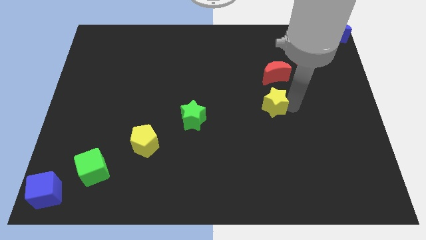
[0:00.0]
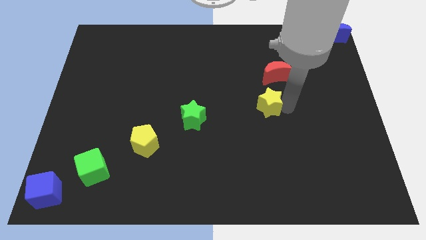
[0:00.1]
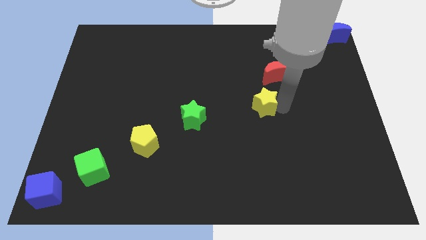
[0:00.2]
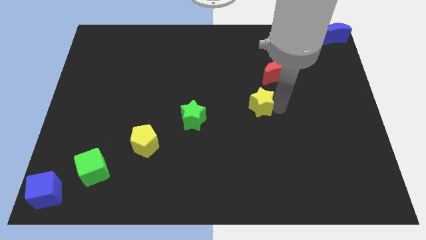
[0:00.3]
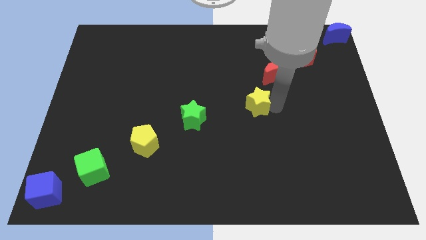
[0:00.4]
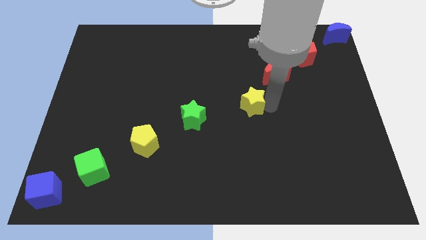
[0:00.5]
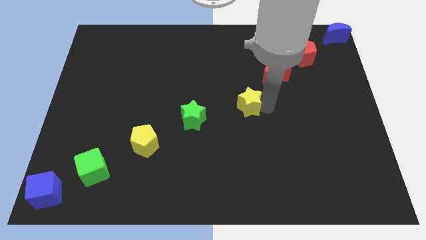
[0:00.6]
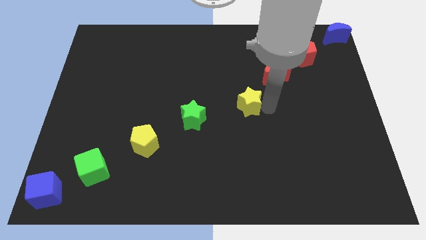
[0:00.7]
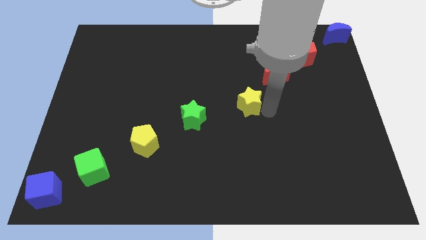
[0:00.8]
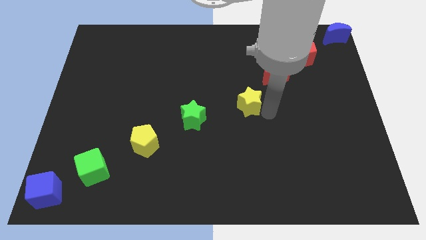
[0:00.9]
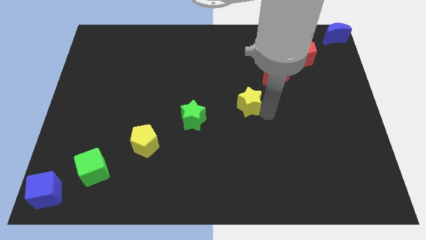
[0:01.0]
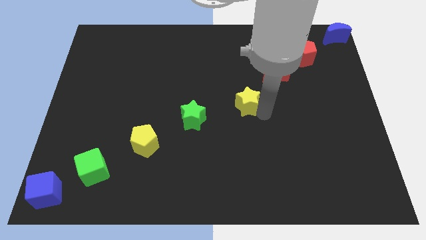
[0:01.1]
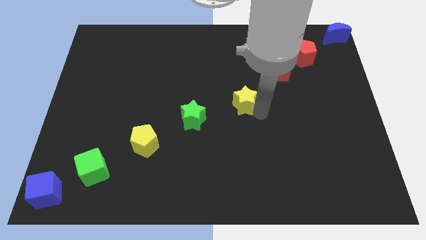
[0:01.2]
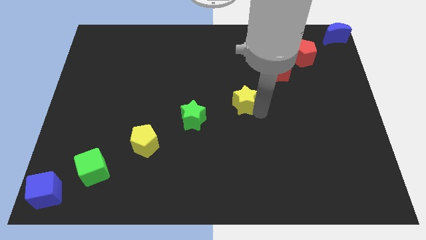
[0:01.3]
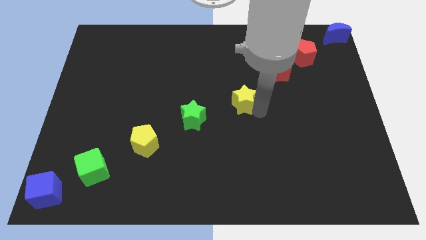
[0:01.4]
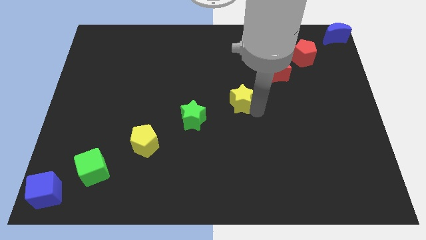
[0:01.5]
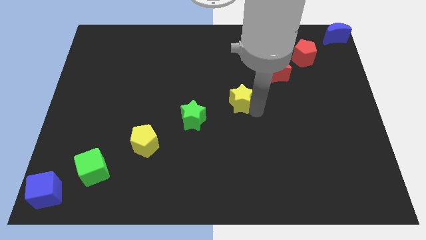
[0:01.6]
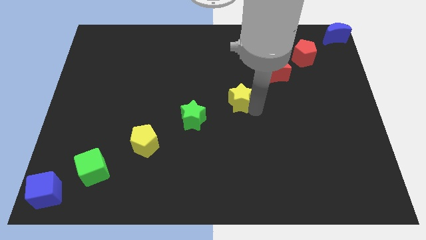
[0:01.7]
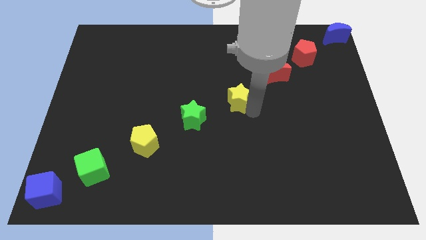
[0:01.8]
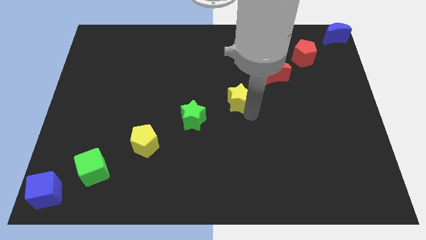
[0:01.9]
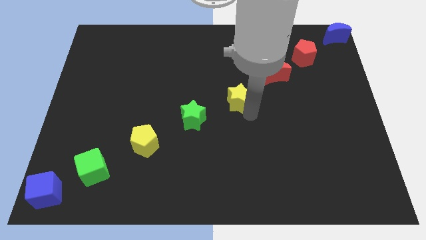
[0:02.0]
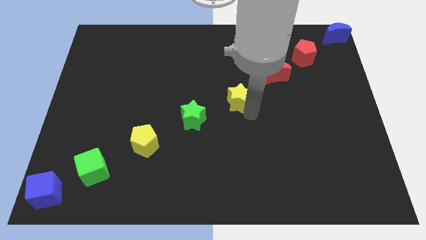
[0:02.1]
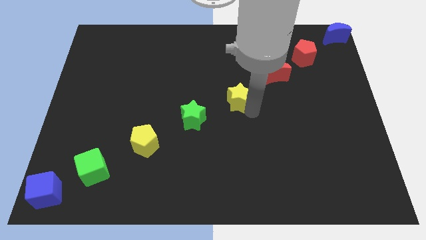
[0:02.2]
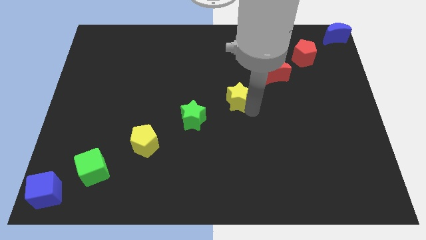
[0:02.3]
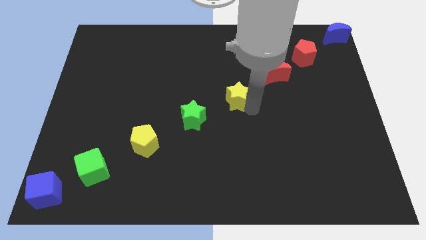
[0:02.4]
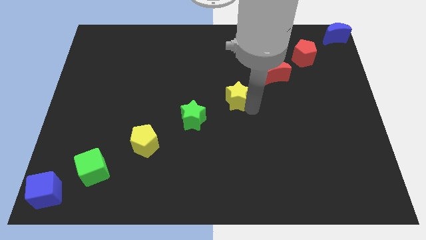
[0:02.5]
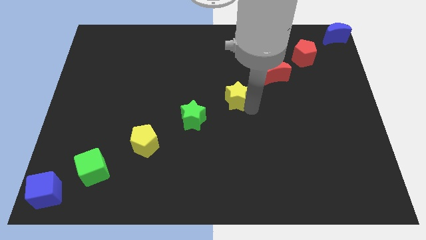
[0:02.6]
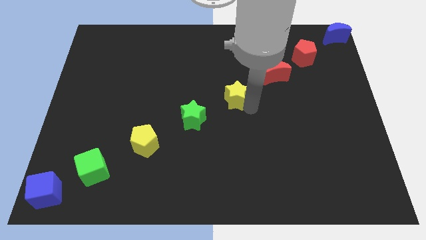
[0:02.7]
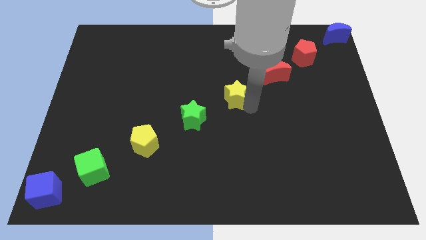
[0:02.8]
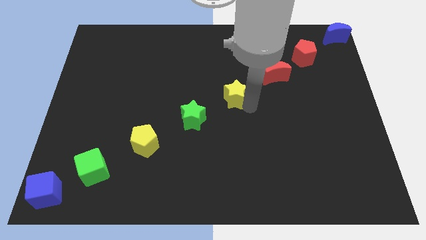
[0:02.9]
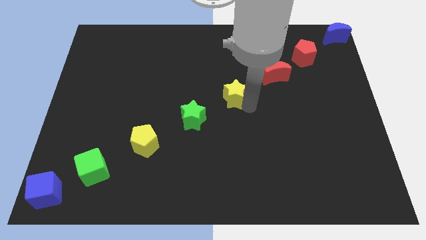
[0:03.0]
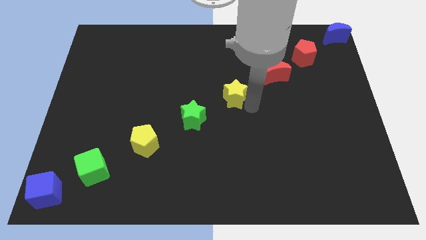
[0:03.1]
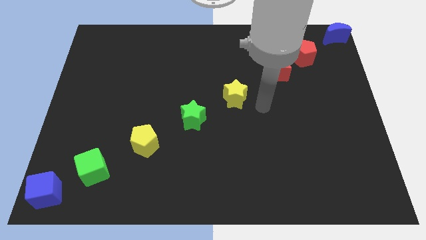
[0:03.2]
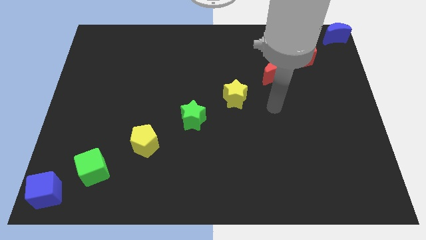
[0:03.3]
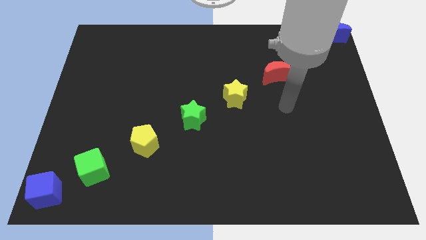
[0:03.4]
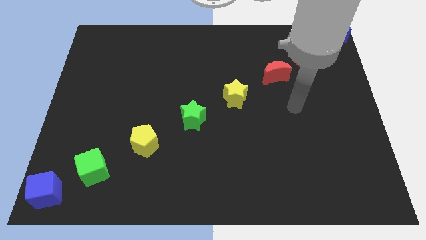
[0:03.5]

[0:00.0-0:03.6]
place the yellow star to the right of the green star

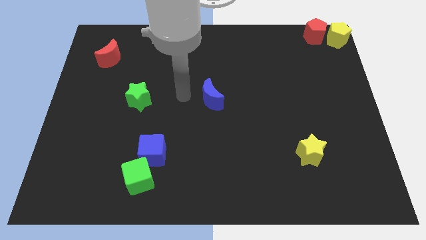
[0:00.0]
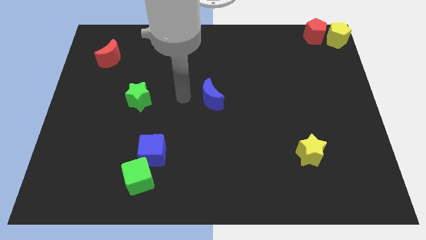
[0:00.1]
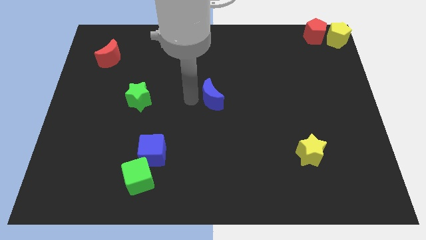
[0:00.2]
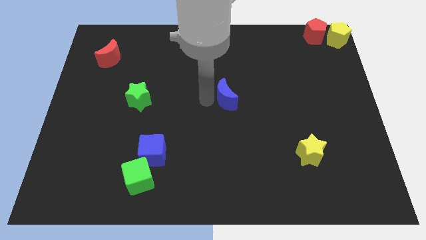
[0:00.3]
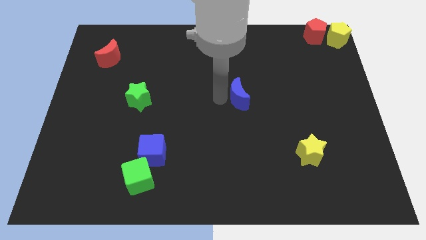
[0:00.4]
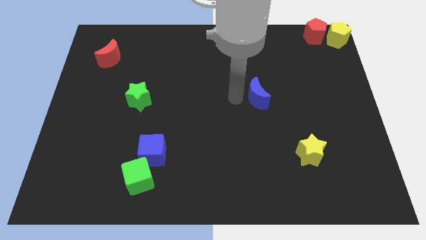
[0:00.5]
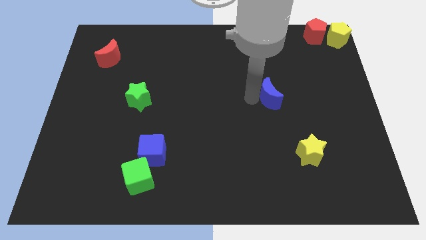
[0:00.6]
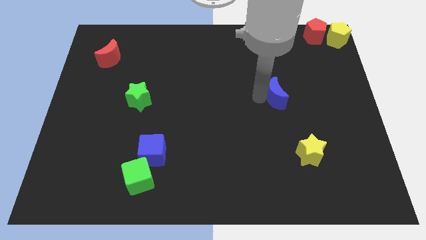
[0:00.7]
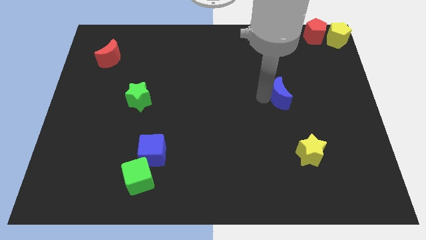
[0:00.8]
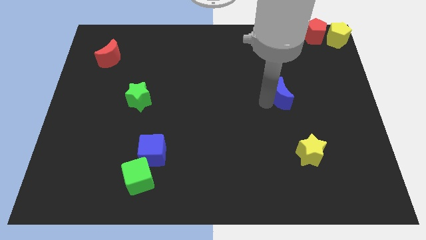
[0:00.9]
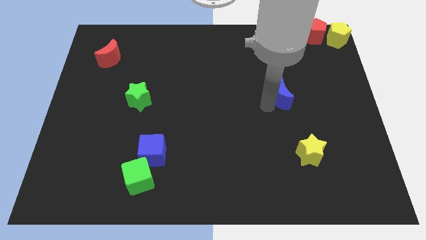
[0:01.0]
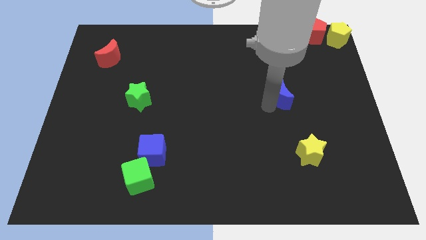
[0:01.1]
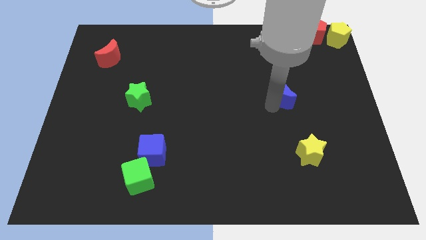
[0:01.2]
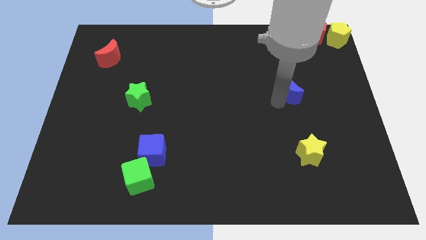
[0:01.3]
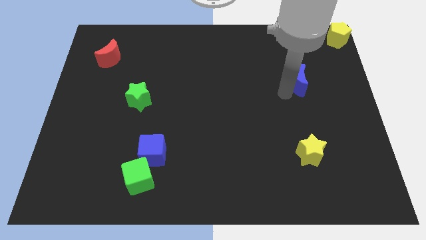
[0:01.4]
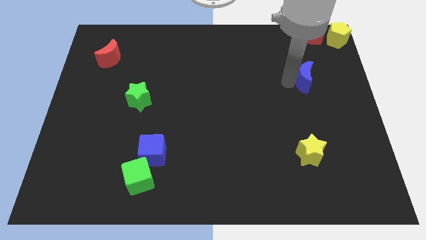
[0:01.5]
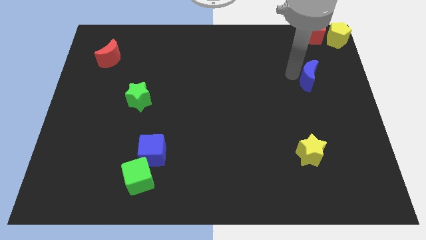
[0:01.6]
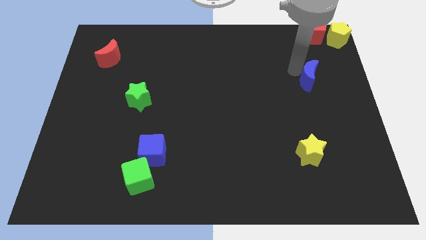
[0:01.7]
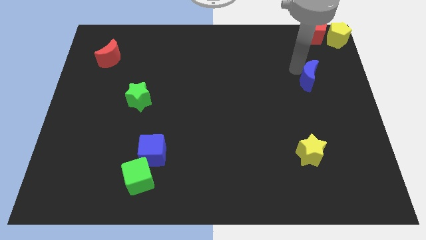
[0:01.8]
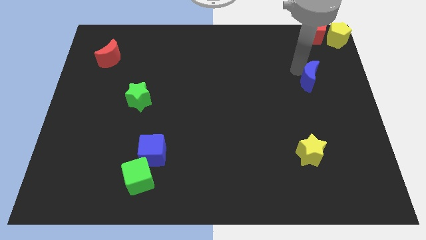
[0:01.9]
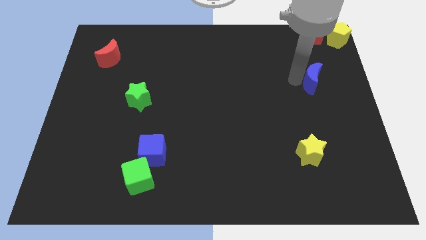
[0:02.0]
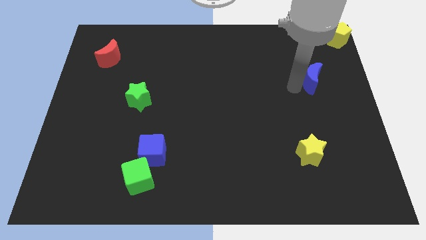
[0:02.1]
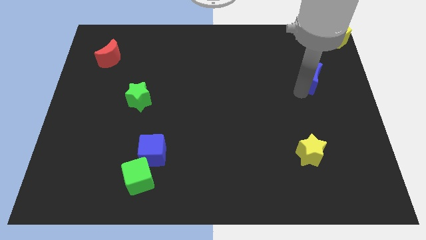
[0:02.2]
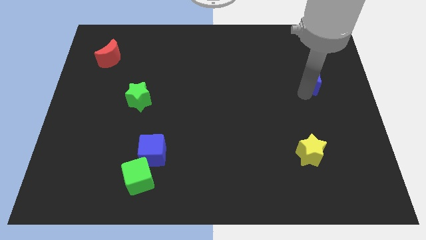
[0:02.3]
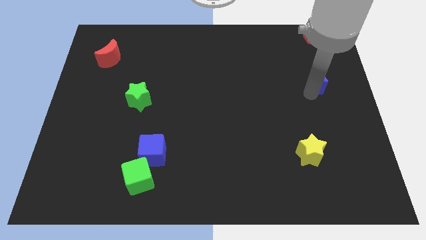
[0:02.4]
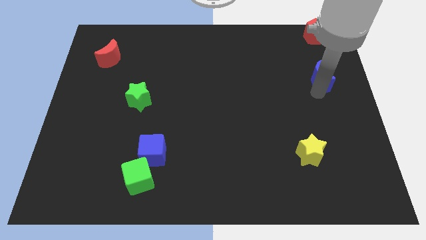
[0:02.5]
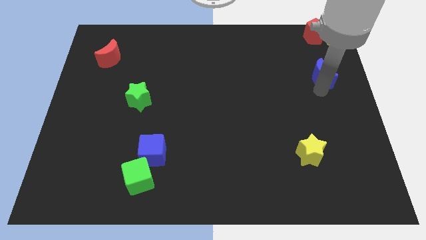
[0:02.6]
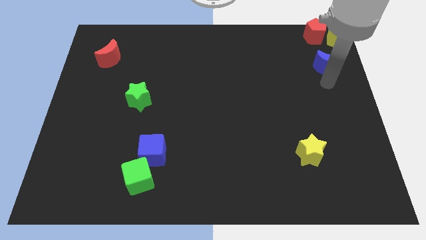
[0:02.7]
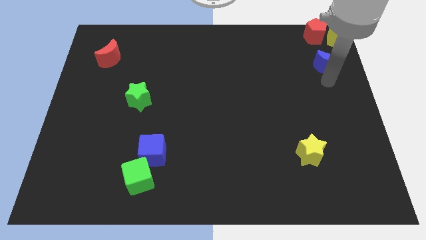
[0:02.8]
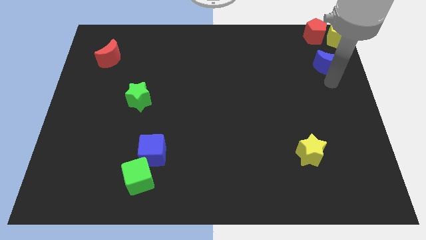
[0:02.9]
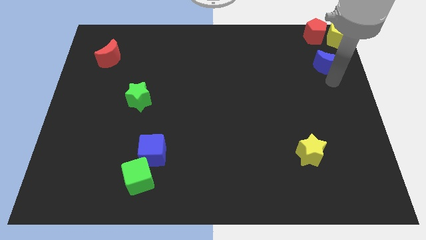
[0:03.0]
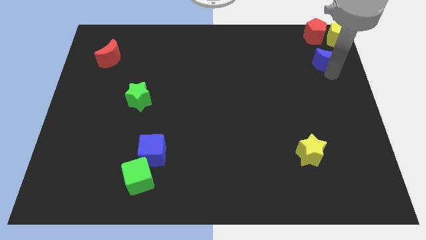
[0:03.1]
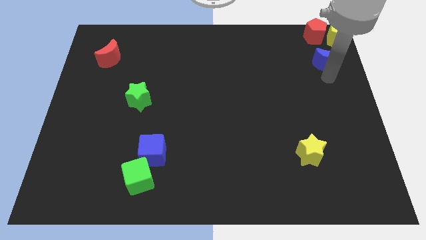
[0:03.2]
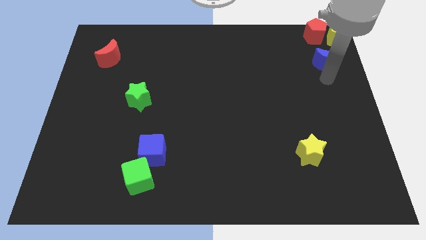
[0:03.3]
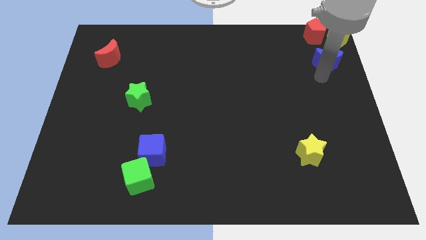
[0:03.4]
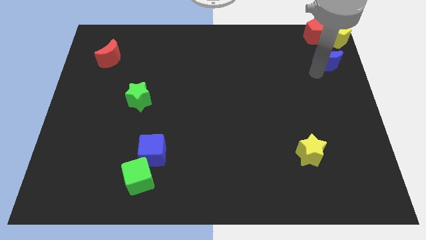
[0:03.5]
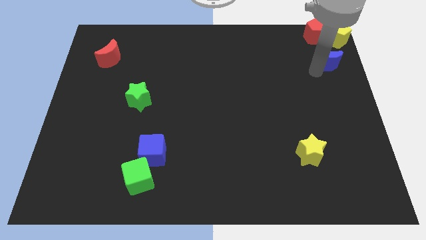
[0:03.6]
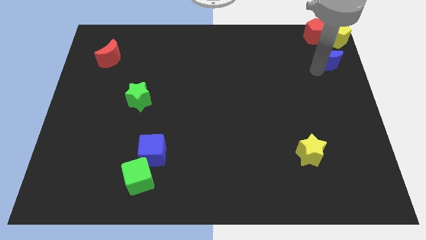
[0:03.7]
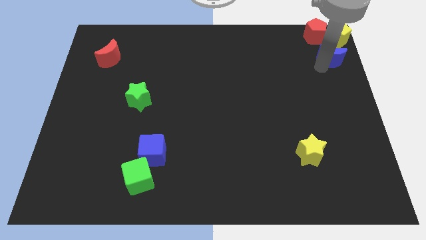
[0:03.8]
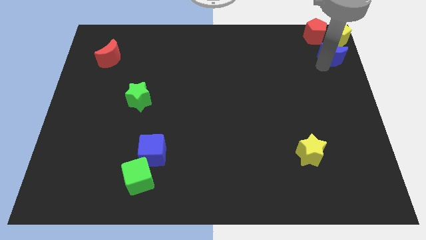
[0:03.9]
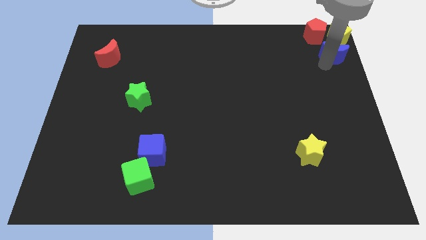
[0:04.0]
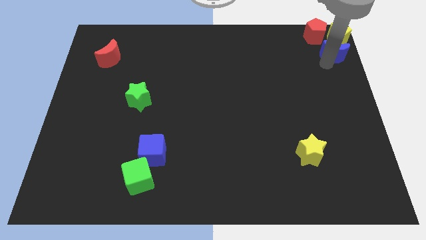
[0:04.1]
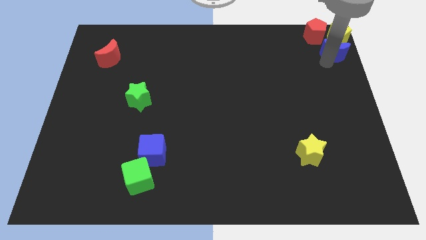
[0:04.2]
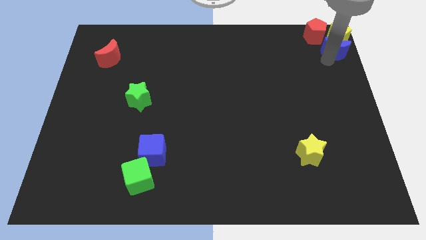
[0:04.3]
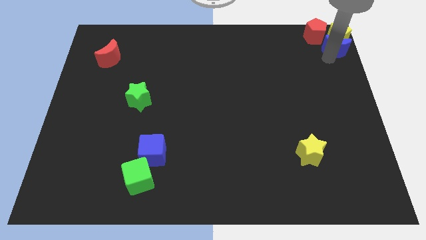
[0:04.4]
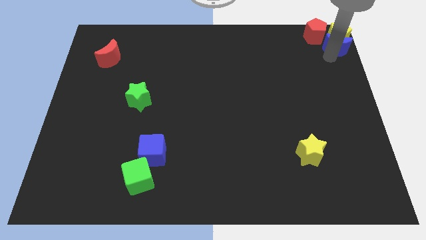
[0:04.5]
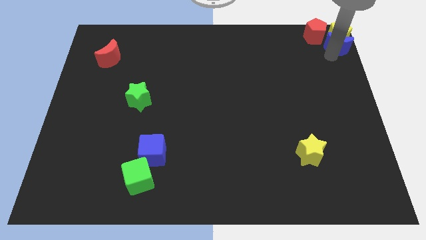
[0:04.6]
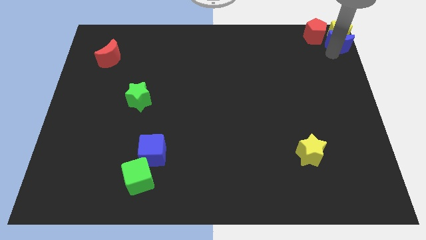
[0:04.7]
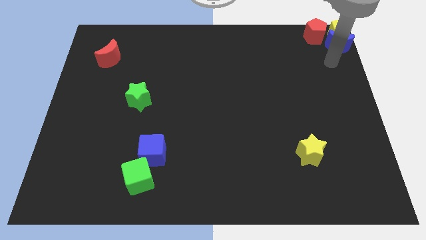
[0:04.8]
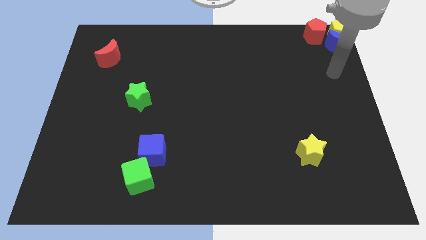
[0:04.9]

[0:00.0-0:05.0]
move the blue moon to the top right corner below the yellow pentagon

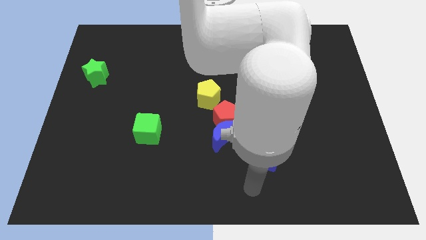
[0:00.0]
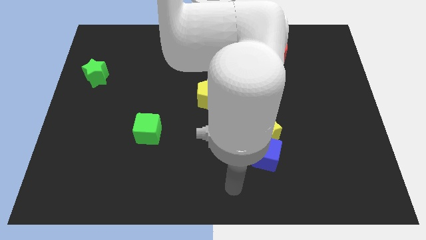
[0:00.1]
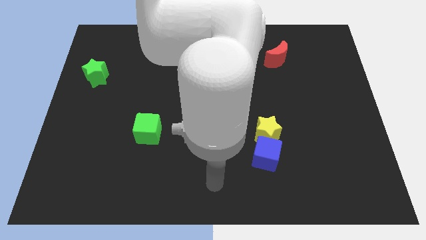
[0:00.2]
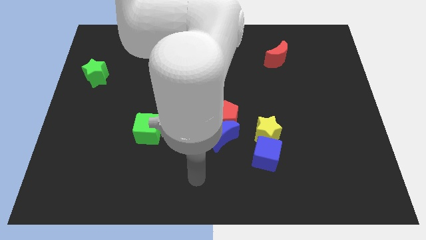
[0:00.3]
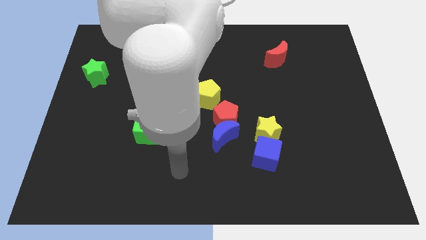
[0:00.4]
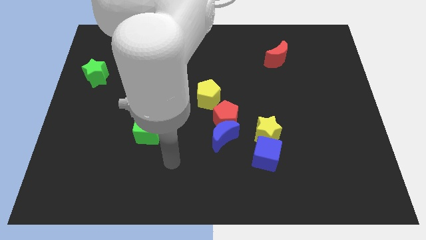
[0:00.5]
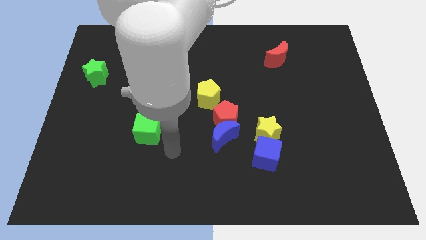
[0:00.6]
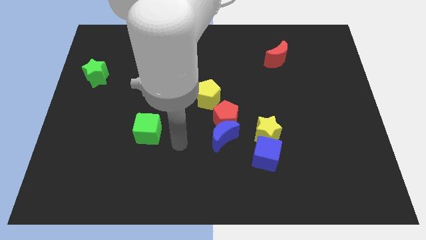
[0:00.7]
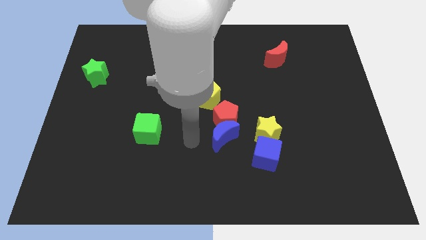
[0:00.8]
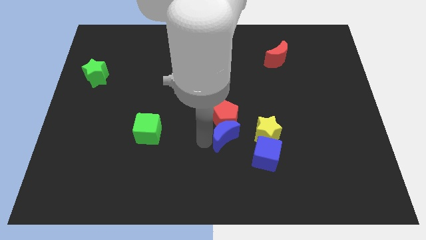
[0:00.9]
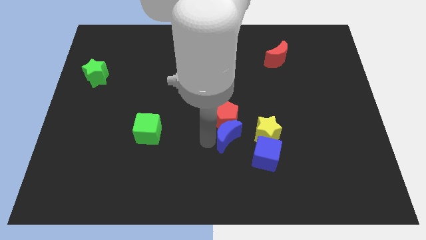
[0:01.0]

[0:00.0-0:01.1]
tap on the bottom left side of blue moon
